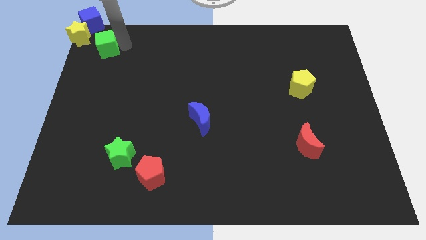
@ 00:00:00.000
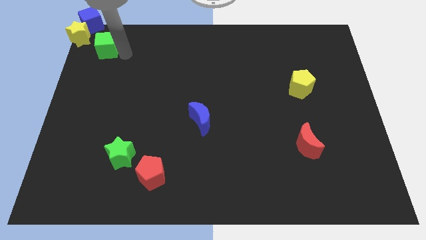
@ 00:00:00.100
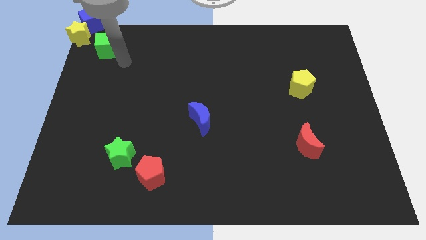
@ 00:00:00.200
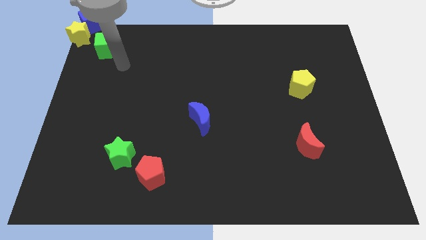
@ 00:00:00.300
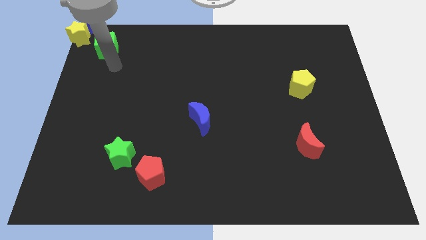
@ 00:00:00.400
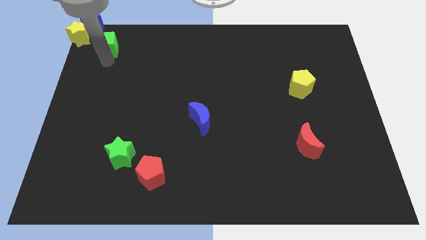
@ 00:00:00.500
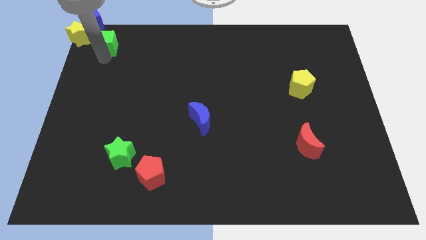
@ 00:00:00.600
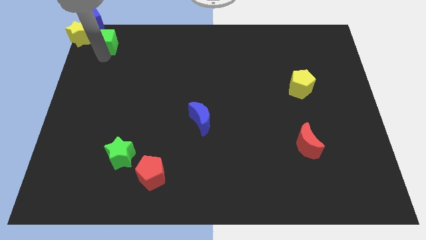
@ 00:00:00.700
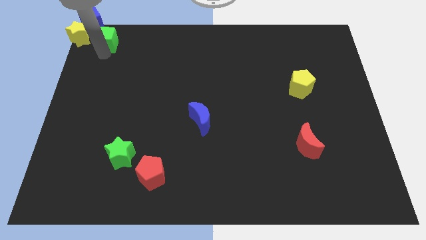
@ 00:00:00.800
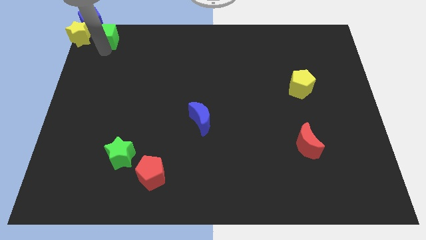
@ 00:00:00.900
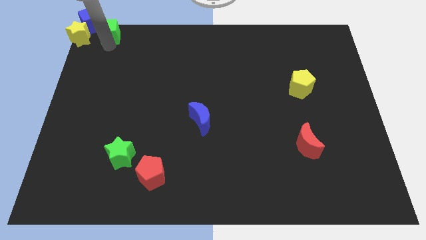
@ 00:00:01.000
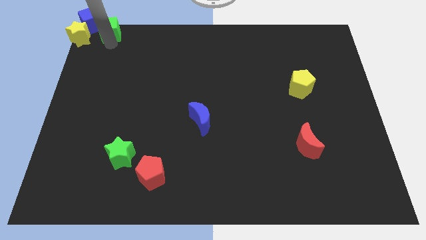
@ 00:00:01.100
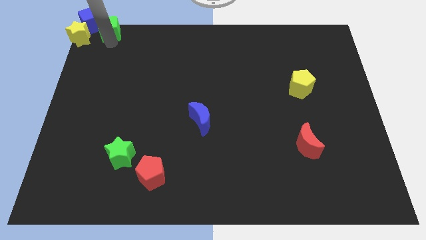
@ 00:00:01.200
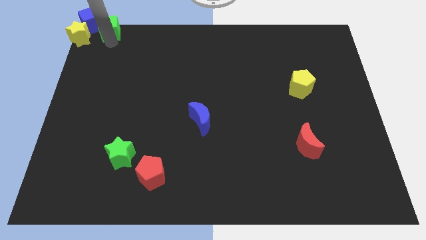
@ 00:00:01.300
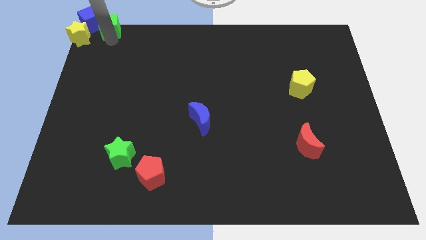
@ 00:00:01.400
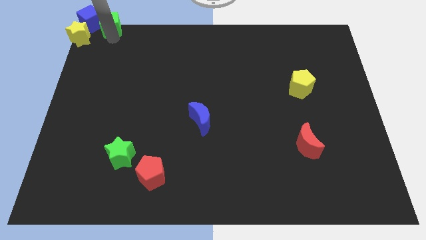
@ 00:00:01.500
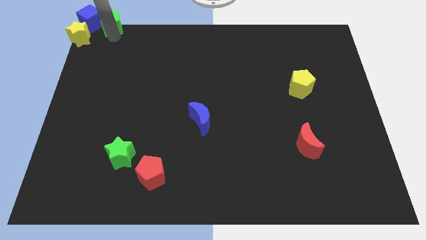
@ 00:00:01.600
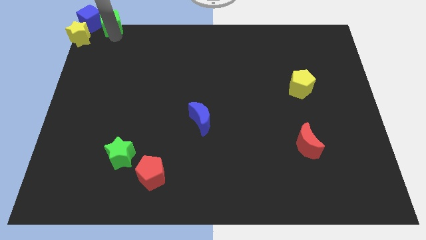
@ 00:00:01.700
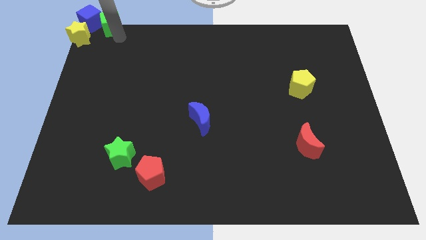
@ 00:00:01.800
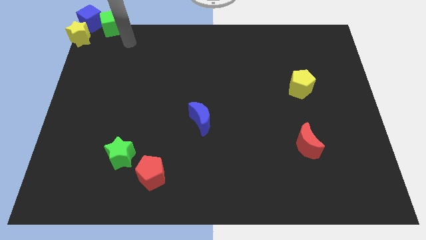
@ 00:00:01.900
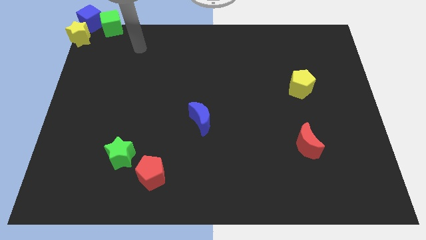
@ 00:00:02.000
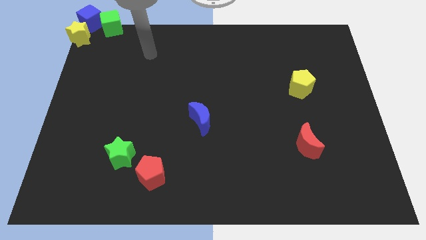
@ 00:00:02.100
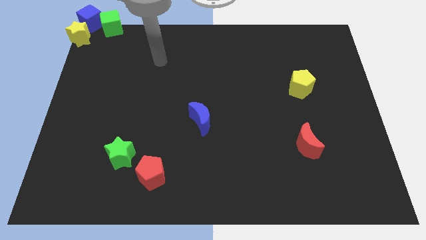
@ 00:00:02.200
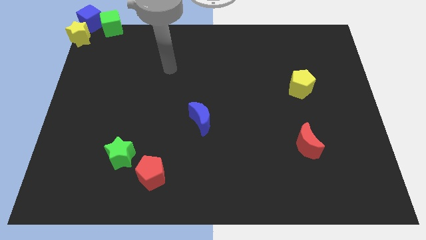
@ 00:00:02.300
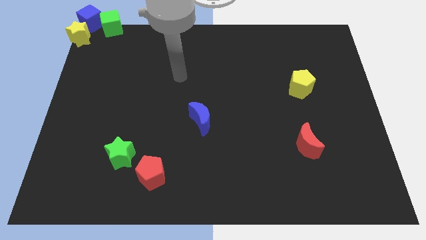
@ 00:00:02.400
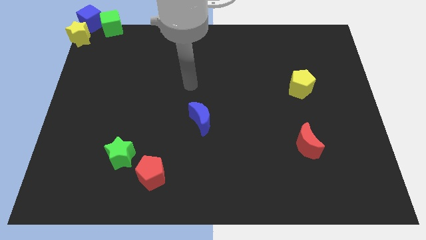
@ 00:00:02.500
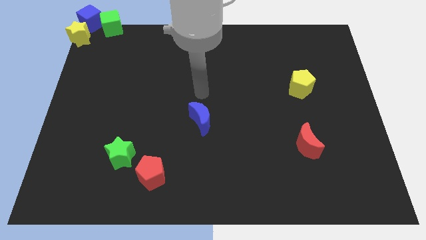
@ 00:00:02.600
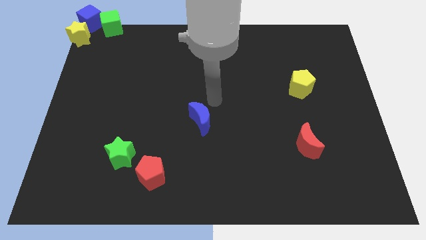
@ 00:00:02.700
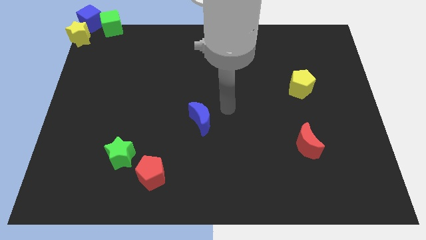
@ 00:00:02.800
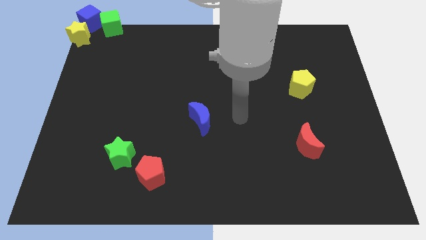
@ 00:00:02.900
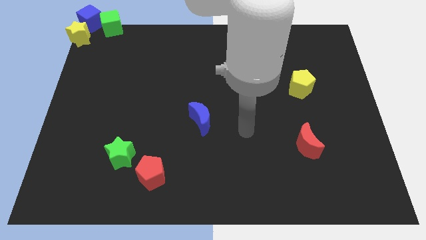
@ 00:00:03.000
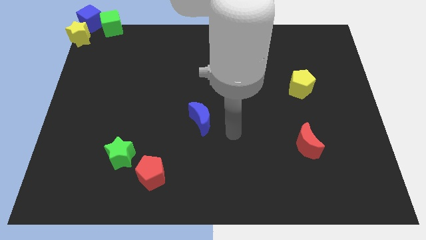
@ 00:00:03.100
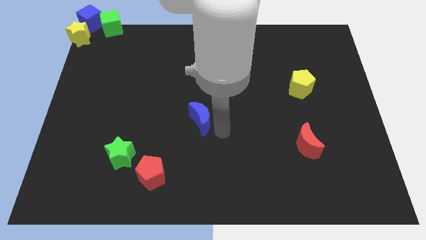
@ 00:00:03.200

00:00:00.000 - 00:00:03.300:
place the green cube right to the blue cube

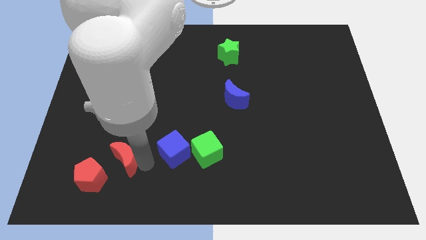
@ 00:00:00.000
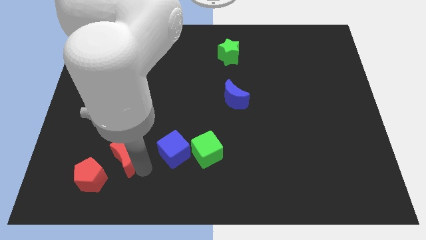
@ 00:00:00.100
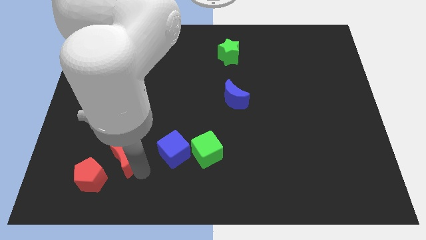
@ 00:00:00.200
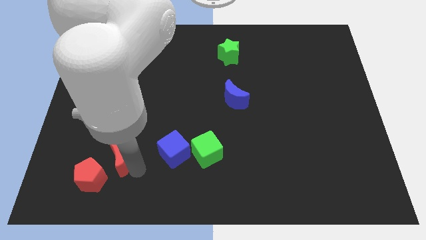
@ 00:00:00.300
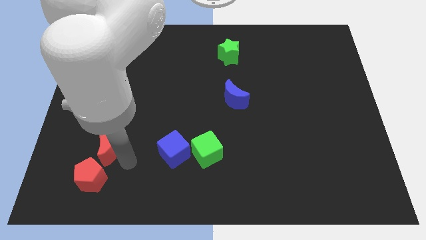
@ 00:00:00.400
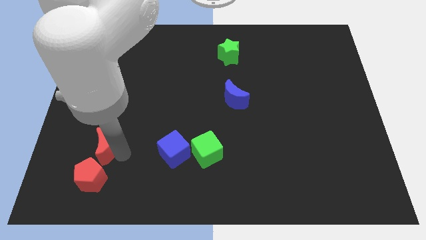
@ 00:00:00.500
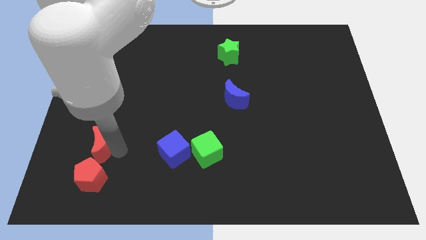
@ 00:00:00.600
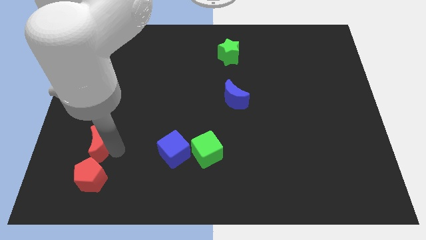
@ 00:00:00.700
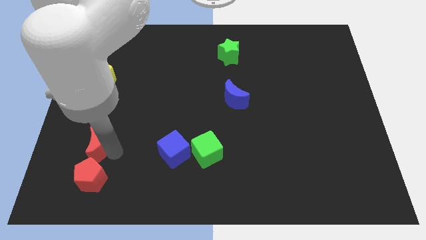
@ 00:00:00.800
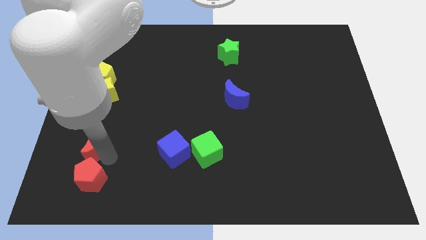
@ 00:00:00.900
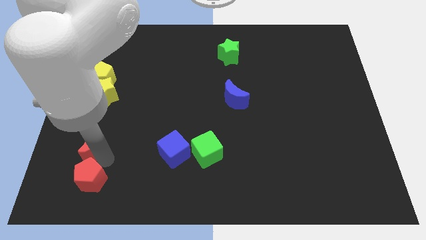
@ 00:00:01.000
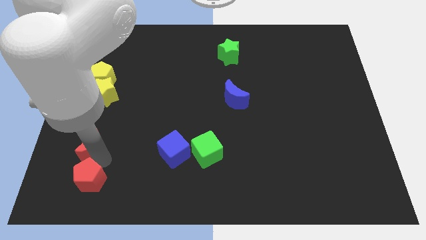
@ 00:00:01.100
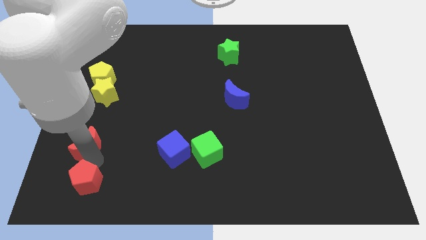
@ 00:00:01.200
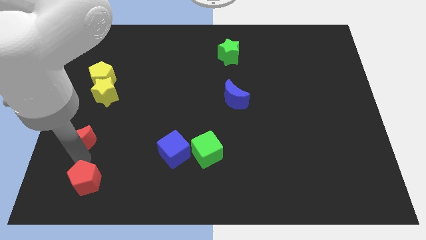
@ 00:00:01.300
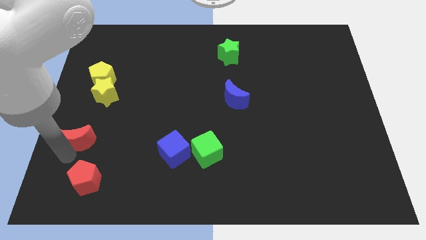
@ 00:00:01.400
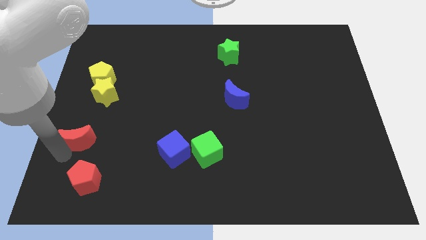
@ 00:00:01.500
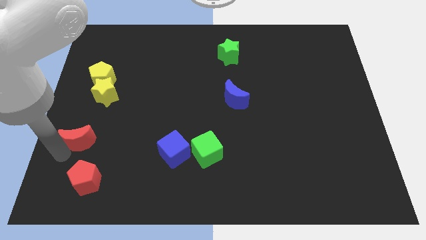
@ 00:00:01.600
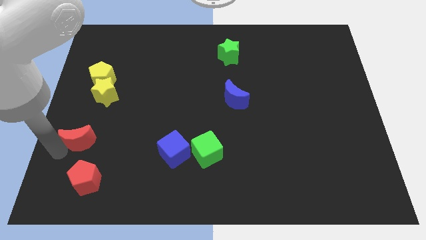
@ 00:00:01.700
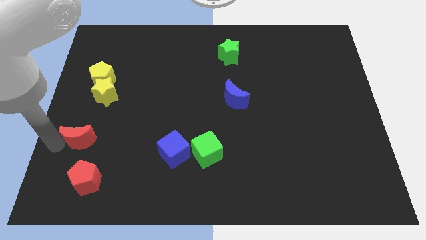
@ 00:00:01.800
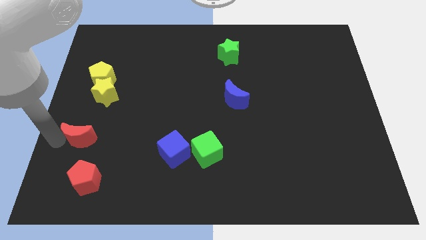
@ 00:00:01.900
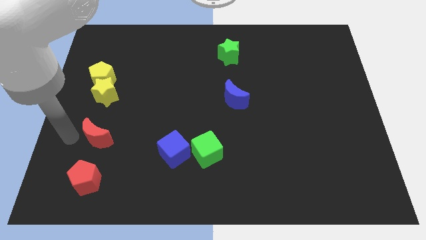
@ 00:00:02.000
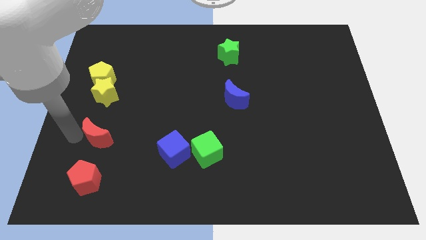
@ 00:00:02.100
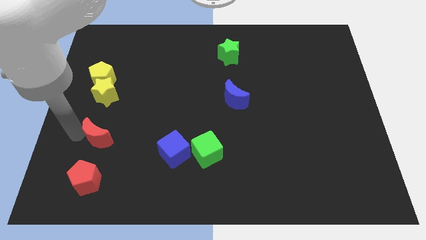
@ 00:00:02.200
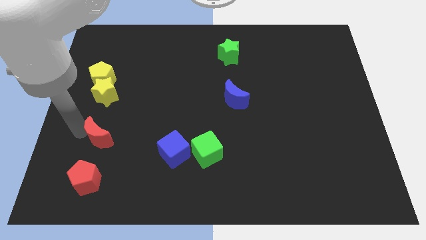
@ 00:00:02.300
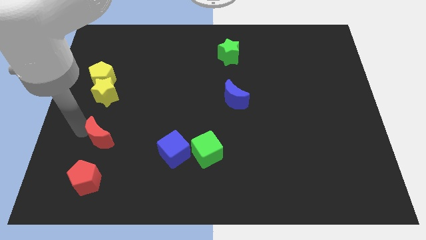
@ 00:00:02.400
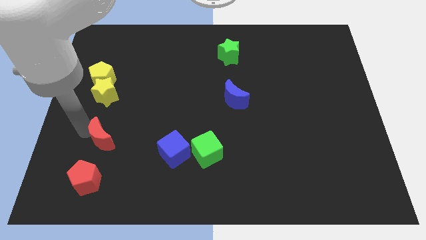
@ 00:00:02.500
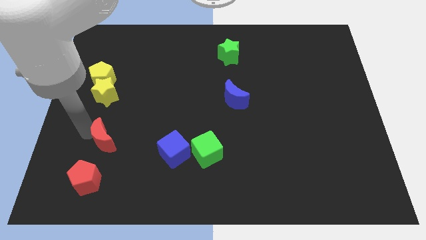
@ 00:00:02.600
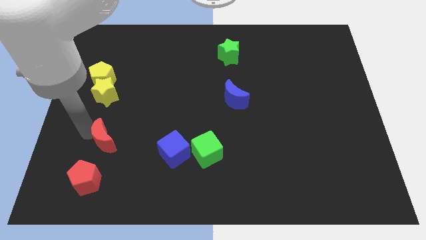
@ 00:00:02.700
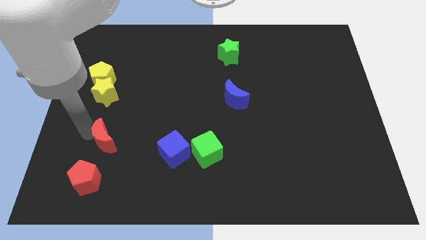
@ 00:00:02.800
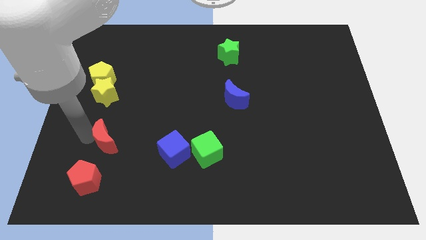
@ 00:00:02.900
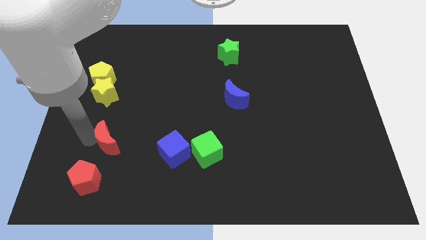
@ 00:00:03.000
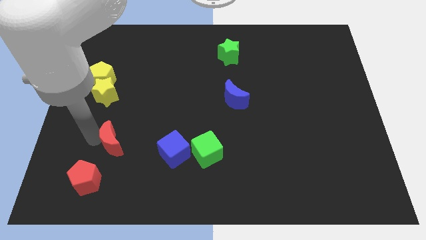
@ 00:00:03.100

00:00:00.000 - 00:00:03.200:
push red crescent diagonally to the top right of the red pentagon

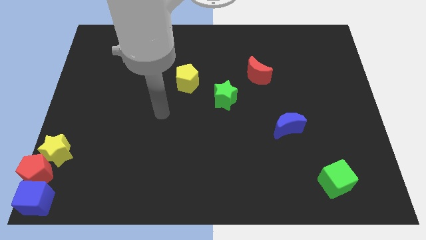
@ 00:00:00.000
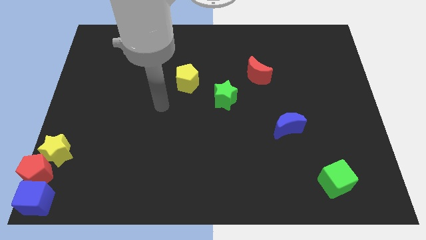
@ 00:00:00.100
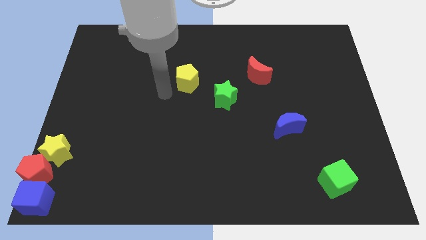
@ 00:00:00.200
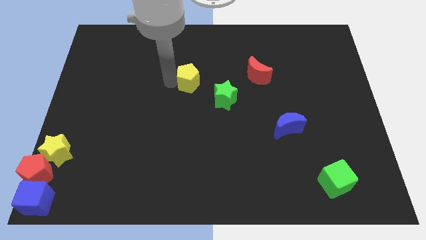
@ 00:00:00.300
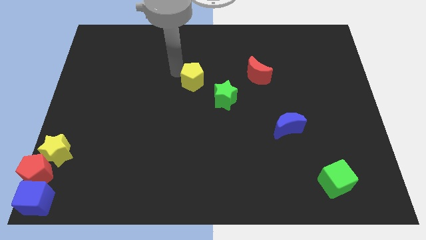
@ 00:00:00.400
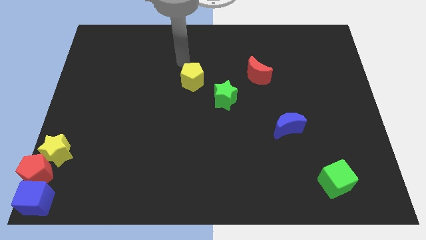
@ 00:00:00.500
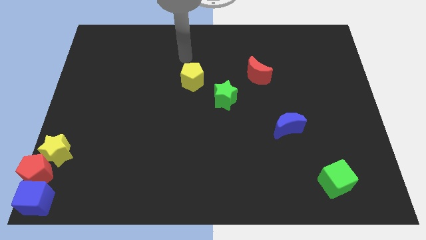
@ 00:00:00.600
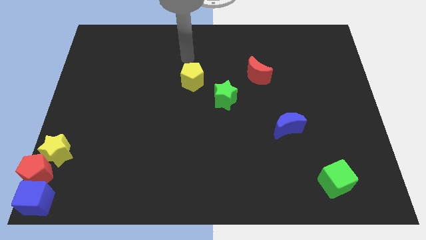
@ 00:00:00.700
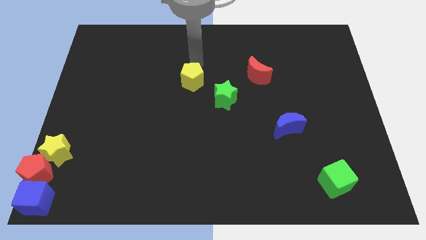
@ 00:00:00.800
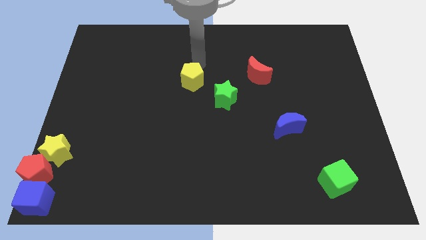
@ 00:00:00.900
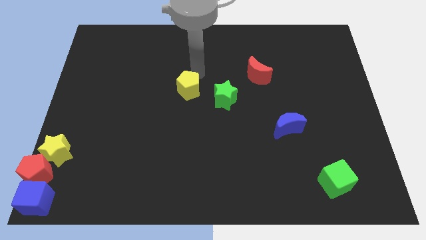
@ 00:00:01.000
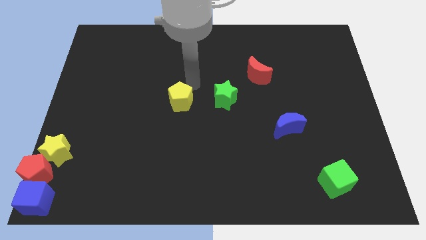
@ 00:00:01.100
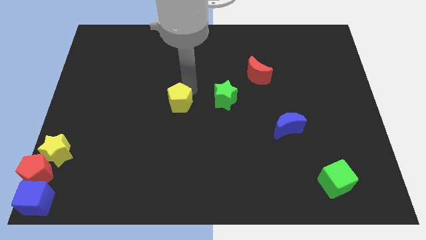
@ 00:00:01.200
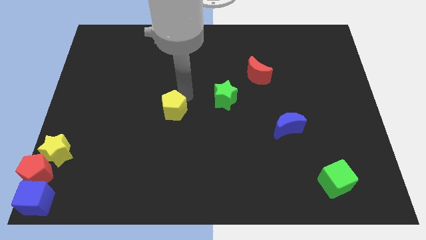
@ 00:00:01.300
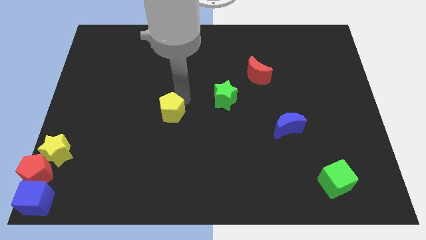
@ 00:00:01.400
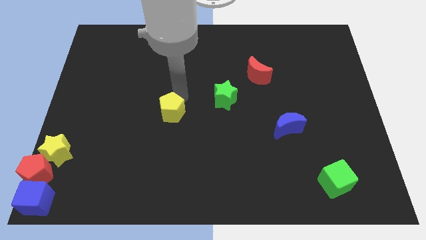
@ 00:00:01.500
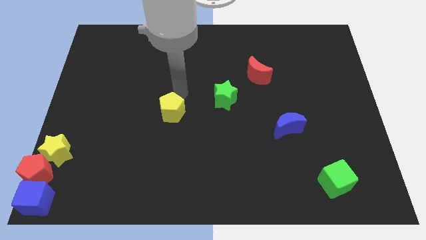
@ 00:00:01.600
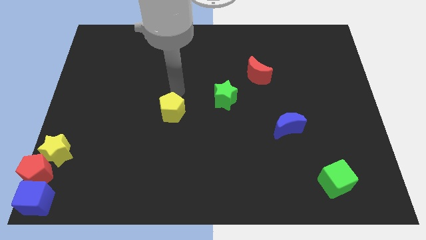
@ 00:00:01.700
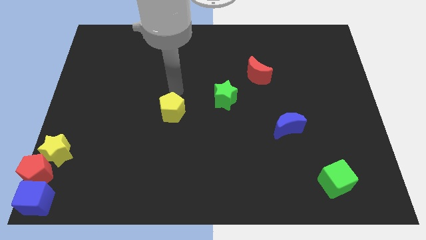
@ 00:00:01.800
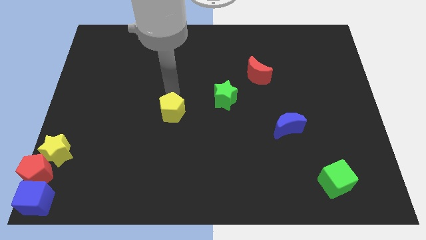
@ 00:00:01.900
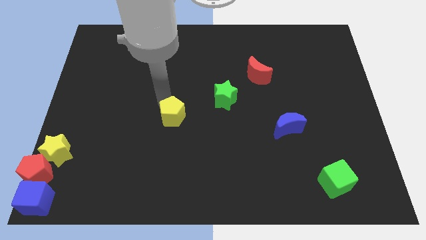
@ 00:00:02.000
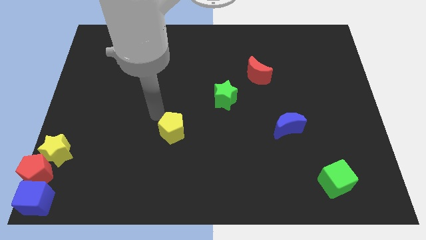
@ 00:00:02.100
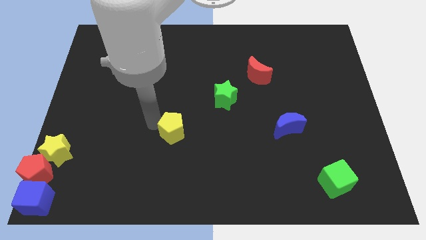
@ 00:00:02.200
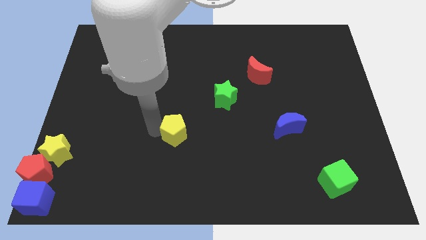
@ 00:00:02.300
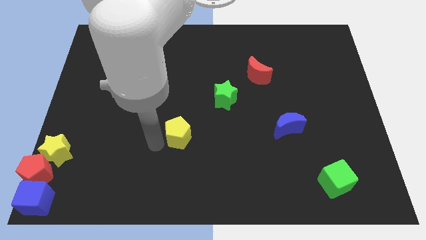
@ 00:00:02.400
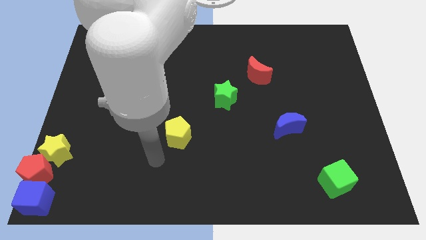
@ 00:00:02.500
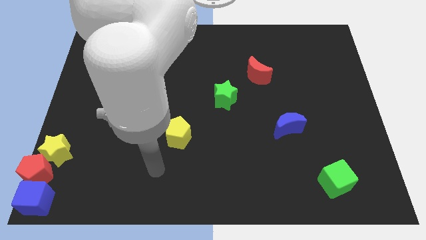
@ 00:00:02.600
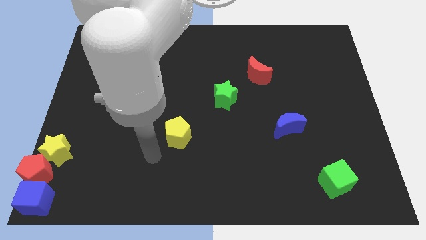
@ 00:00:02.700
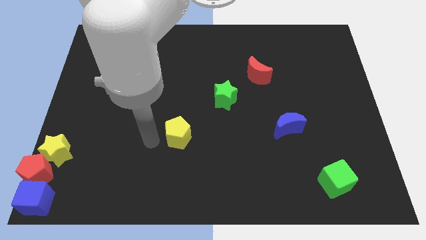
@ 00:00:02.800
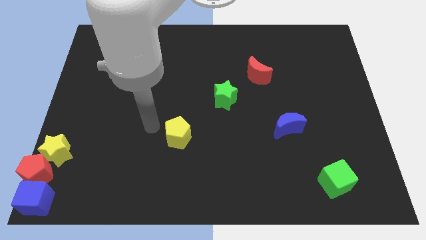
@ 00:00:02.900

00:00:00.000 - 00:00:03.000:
push the yellow pentagon slightly down
